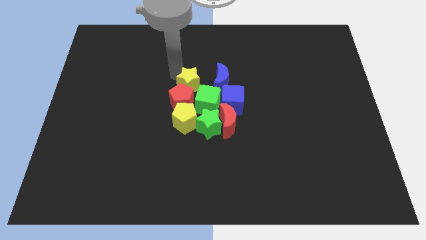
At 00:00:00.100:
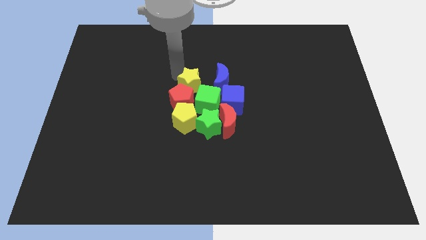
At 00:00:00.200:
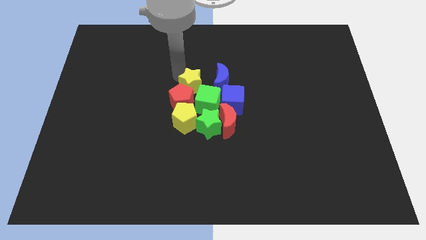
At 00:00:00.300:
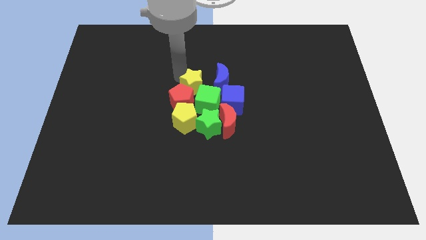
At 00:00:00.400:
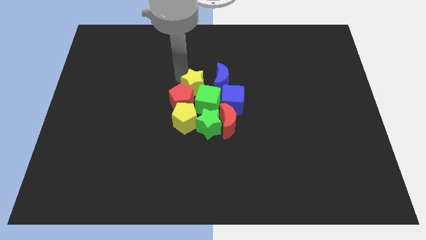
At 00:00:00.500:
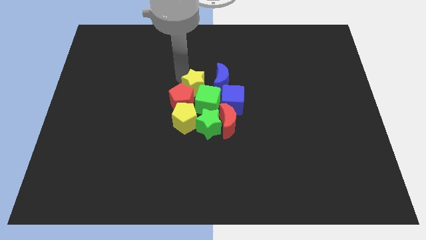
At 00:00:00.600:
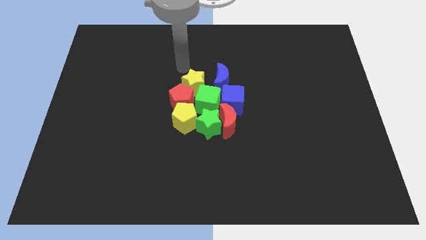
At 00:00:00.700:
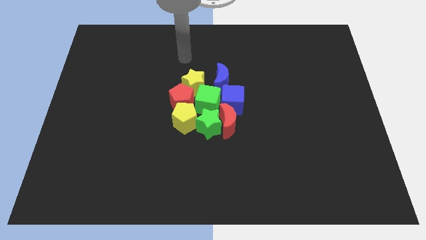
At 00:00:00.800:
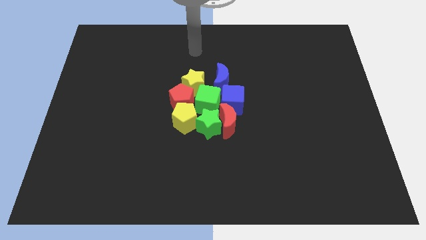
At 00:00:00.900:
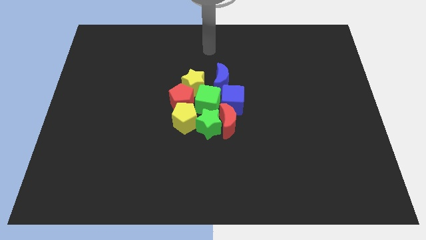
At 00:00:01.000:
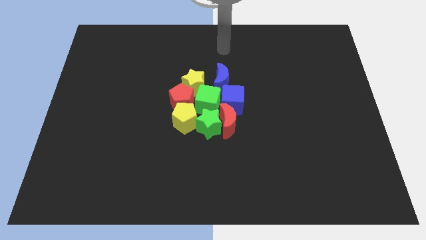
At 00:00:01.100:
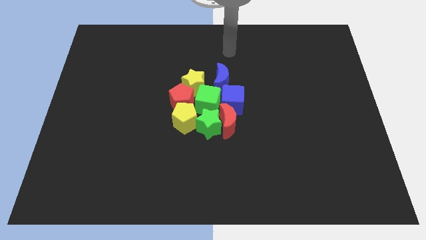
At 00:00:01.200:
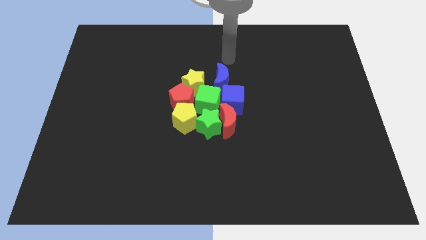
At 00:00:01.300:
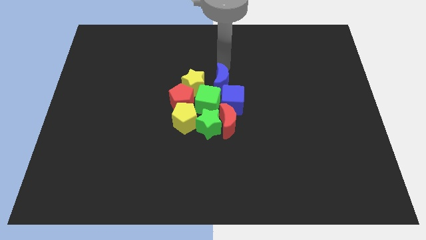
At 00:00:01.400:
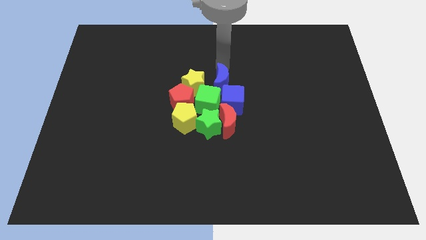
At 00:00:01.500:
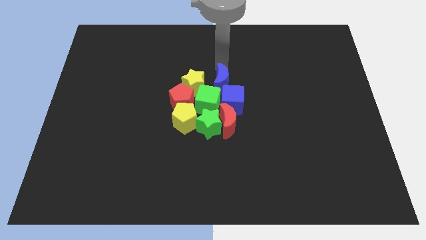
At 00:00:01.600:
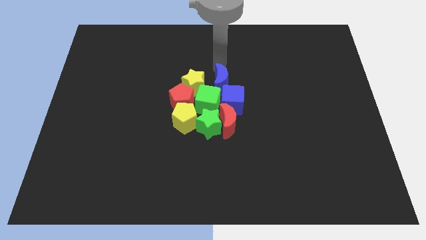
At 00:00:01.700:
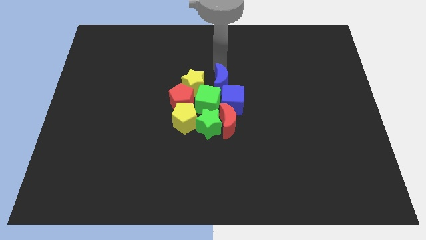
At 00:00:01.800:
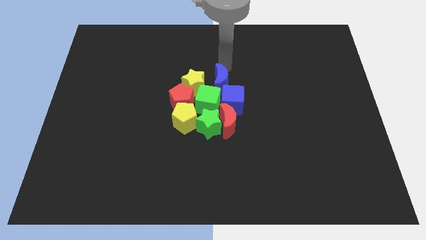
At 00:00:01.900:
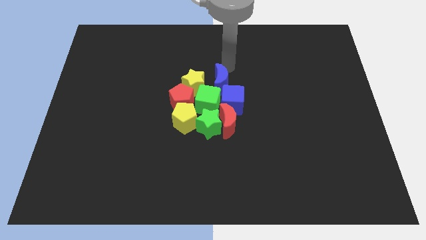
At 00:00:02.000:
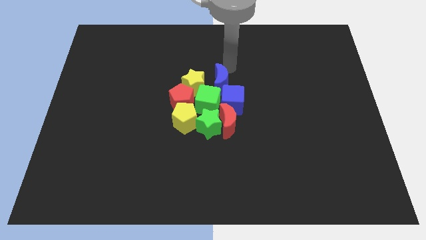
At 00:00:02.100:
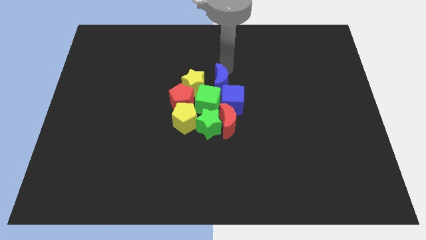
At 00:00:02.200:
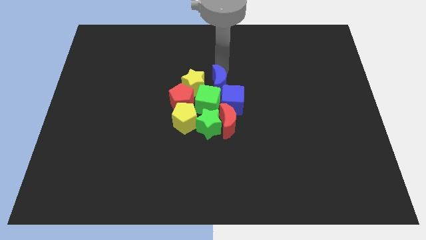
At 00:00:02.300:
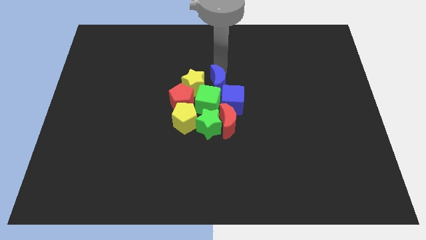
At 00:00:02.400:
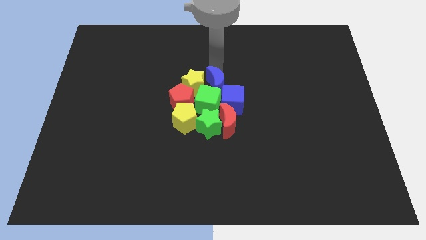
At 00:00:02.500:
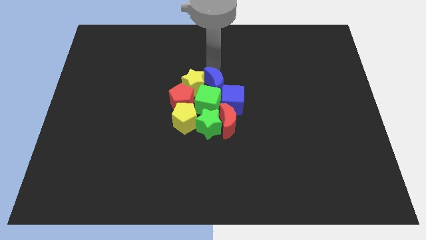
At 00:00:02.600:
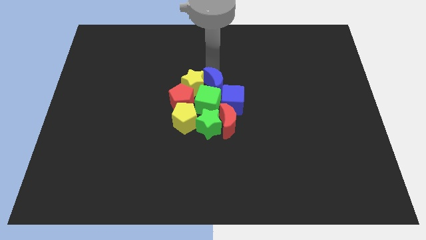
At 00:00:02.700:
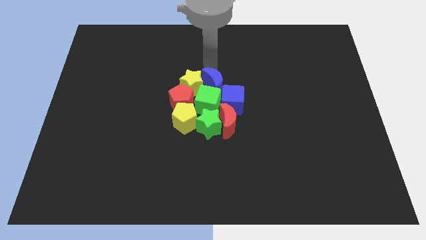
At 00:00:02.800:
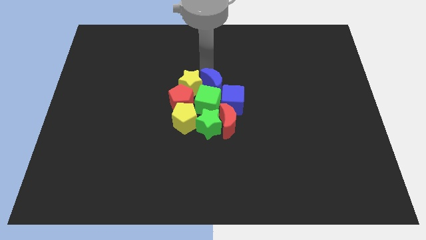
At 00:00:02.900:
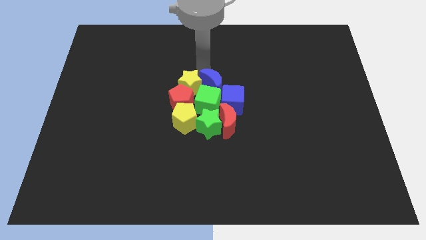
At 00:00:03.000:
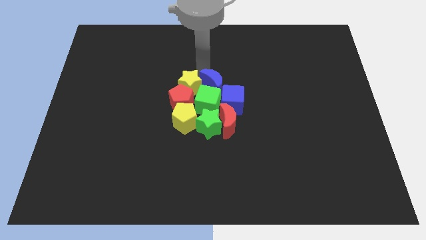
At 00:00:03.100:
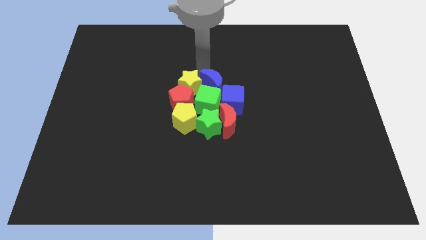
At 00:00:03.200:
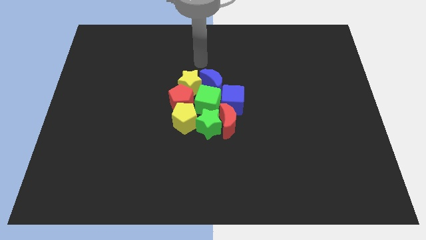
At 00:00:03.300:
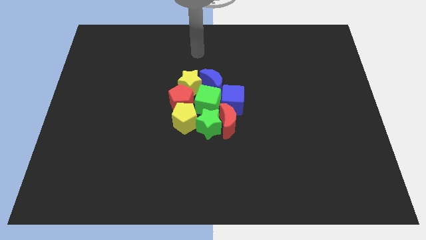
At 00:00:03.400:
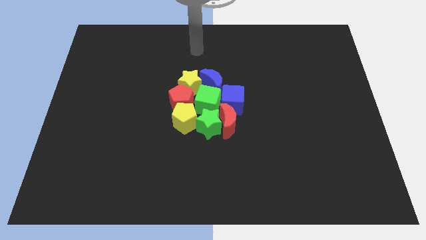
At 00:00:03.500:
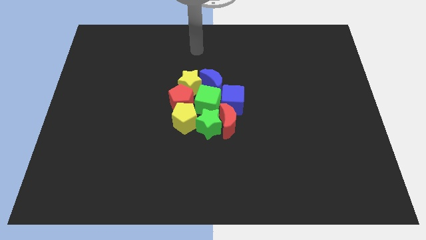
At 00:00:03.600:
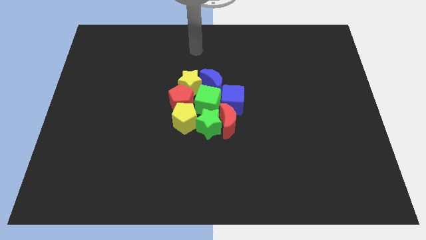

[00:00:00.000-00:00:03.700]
slide the blue moon towards the yellow star

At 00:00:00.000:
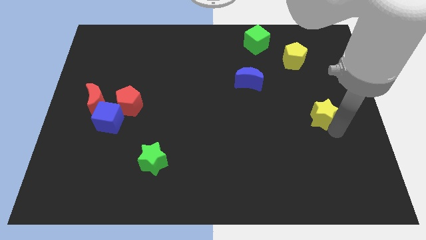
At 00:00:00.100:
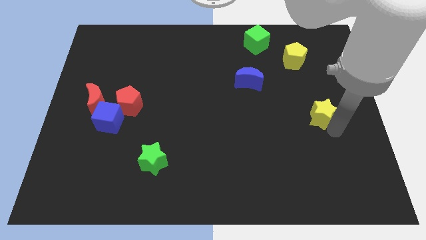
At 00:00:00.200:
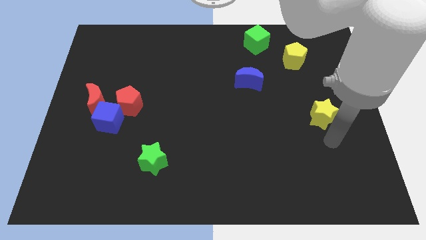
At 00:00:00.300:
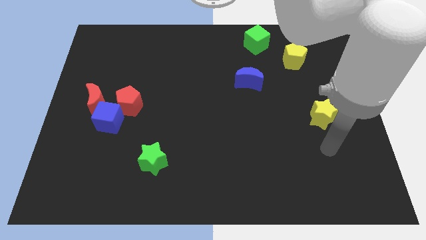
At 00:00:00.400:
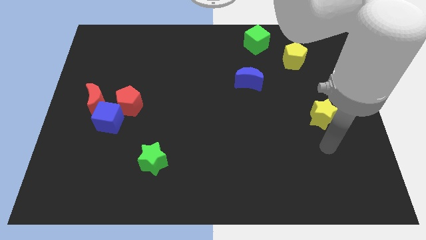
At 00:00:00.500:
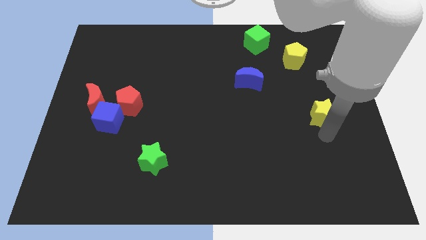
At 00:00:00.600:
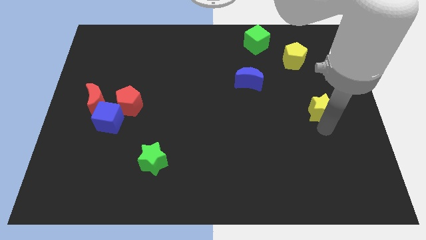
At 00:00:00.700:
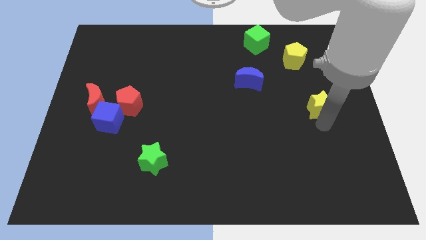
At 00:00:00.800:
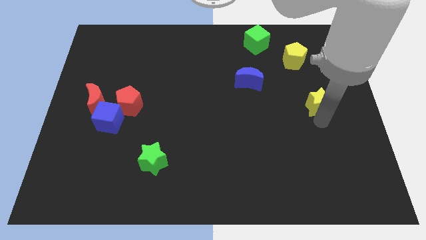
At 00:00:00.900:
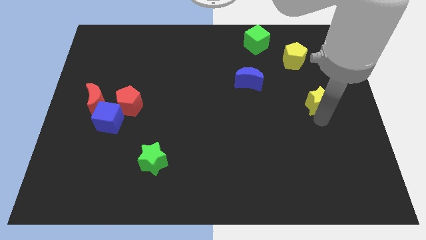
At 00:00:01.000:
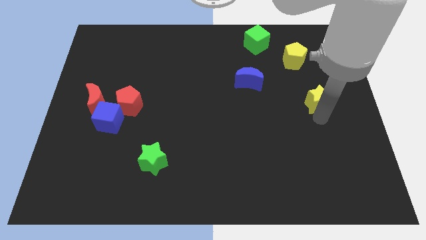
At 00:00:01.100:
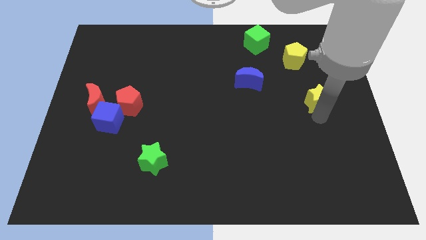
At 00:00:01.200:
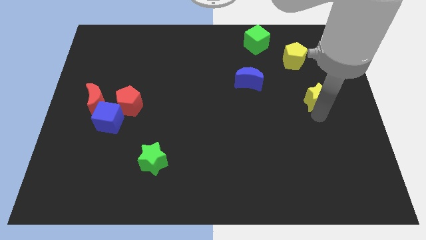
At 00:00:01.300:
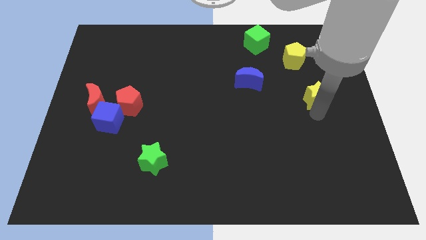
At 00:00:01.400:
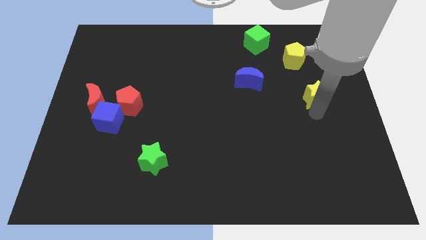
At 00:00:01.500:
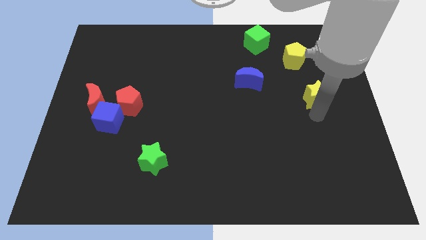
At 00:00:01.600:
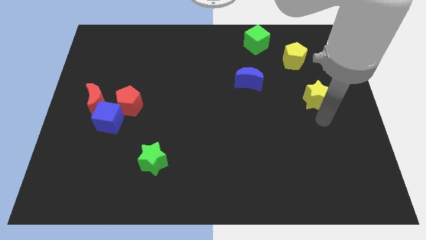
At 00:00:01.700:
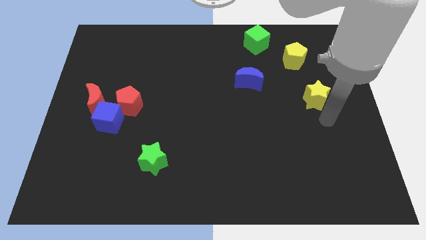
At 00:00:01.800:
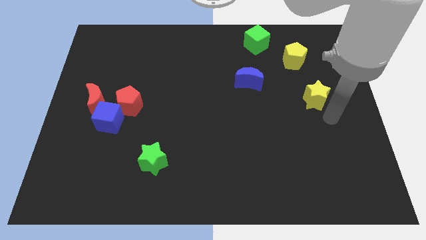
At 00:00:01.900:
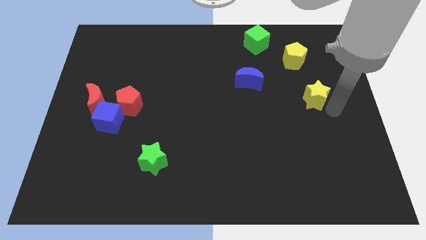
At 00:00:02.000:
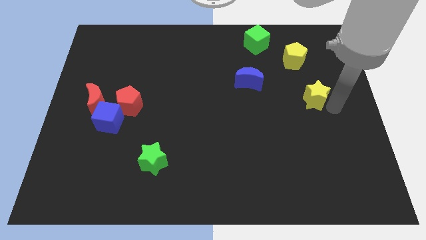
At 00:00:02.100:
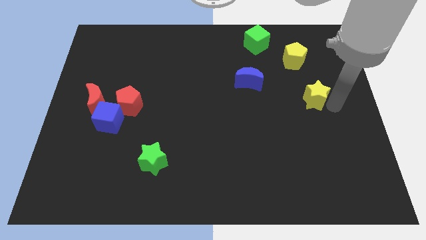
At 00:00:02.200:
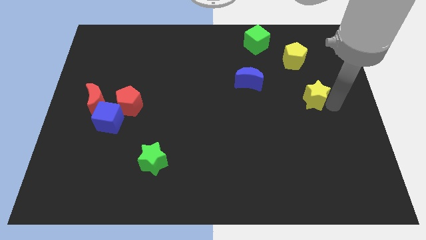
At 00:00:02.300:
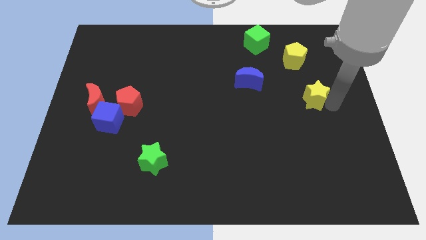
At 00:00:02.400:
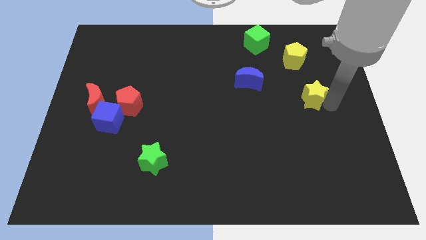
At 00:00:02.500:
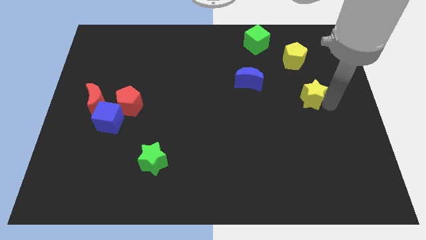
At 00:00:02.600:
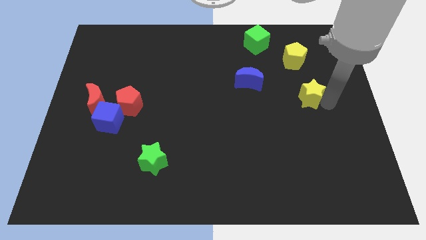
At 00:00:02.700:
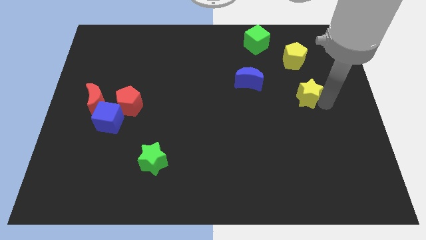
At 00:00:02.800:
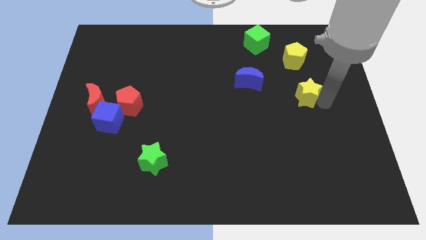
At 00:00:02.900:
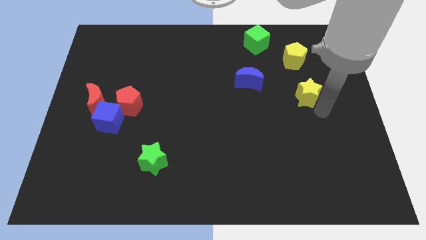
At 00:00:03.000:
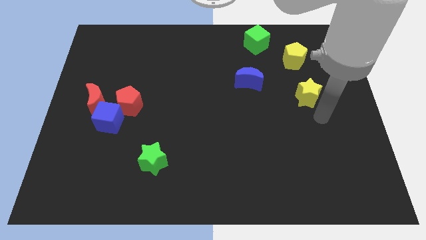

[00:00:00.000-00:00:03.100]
place the yellow star at the right side of the blue crescent

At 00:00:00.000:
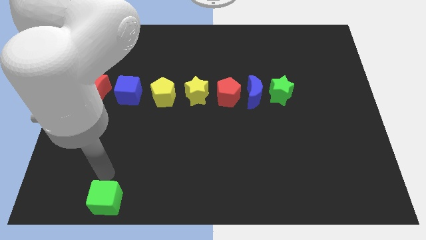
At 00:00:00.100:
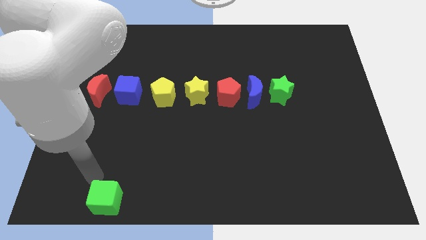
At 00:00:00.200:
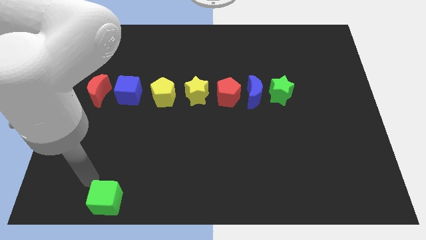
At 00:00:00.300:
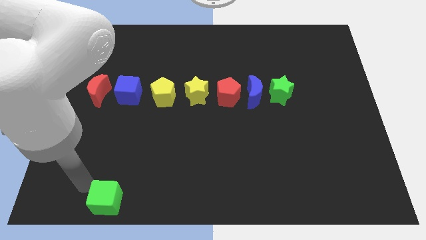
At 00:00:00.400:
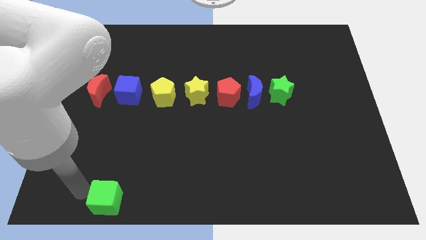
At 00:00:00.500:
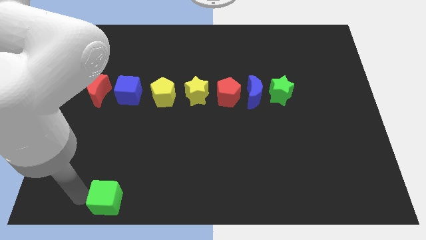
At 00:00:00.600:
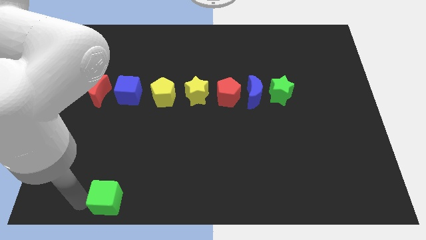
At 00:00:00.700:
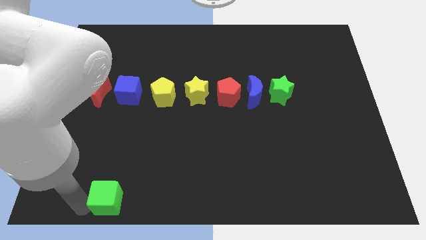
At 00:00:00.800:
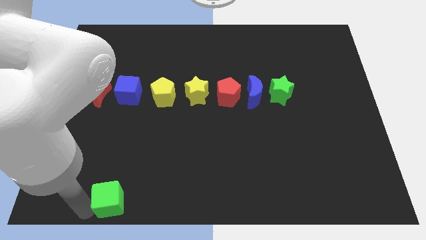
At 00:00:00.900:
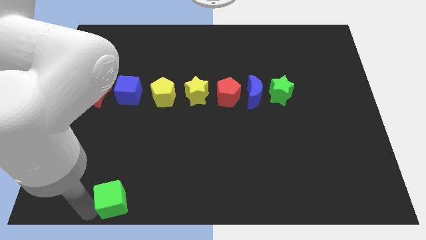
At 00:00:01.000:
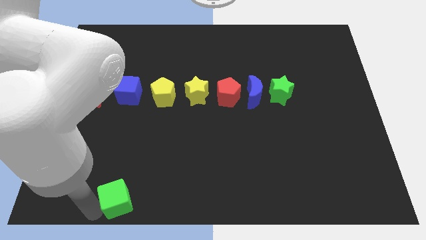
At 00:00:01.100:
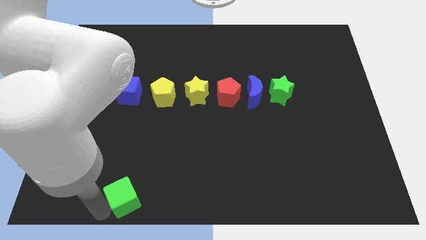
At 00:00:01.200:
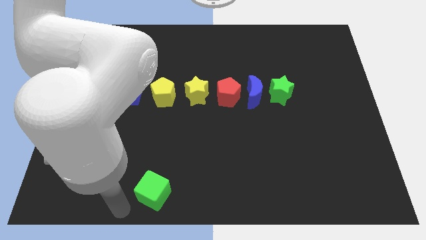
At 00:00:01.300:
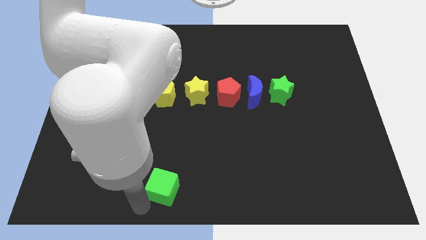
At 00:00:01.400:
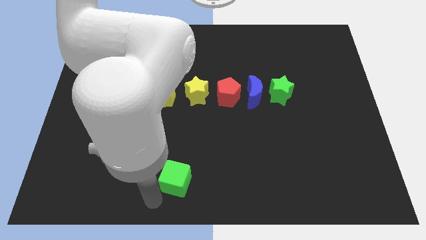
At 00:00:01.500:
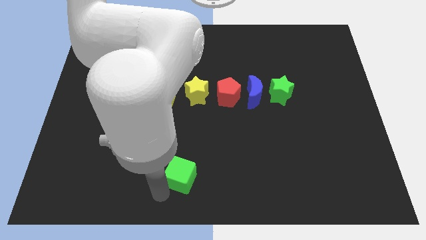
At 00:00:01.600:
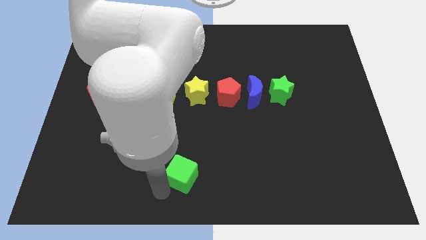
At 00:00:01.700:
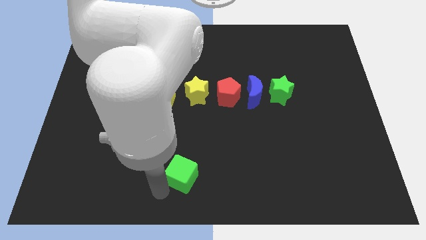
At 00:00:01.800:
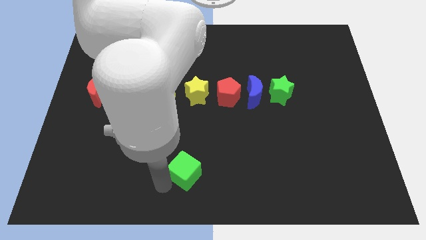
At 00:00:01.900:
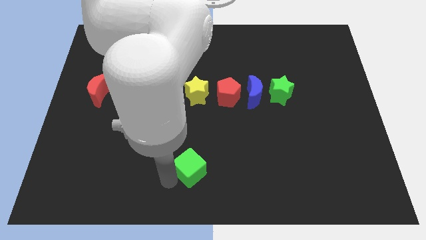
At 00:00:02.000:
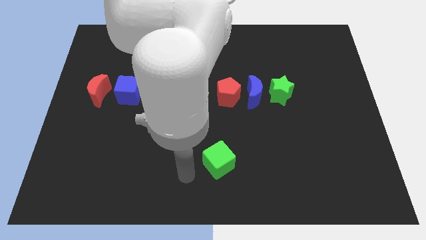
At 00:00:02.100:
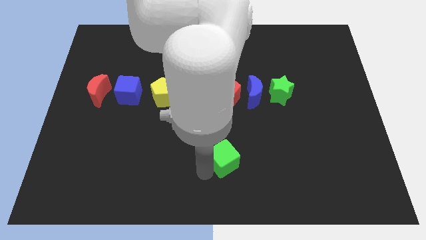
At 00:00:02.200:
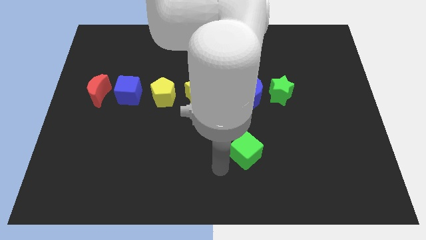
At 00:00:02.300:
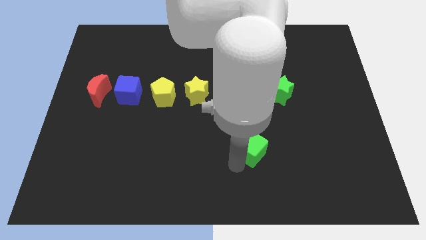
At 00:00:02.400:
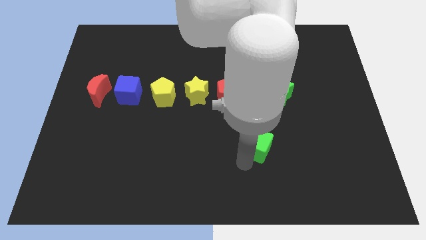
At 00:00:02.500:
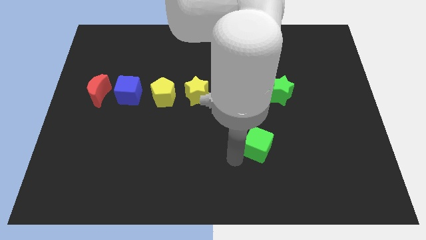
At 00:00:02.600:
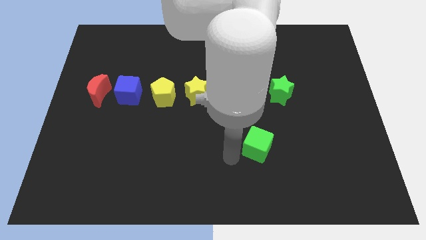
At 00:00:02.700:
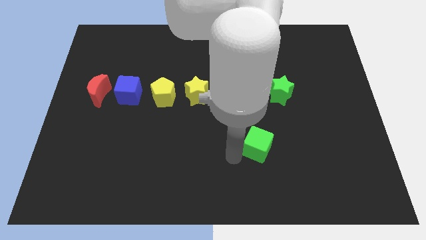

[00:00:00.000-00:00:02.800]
push the green cube towards the center right
